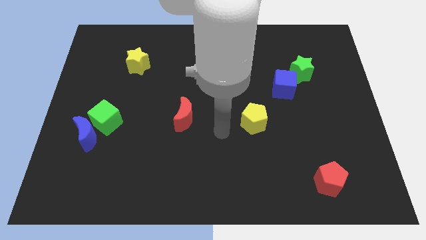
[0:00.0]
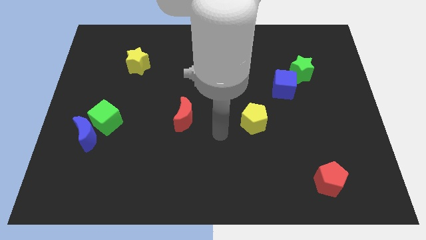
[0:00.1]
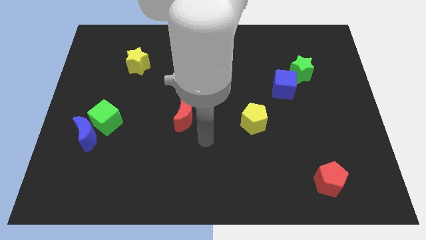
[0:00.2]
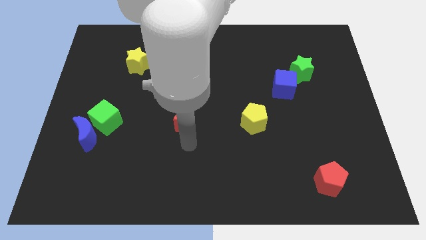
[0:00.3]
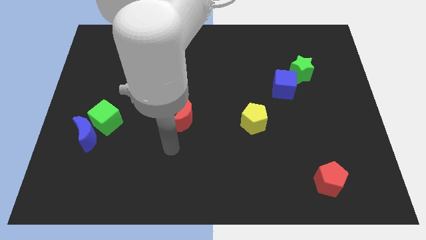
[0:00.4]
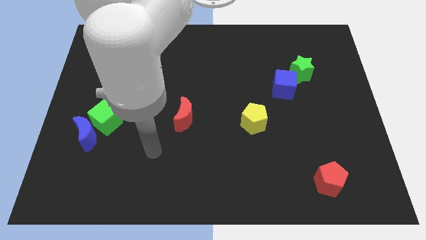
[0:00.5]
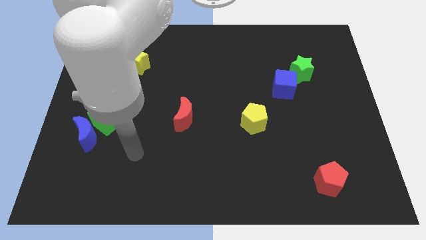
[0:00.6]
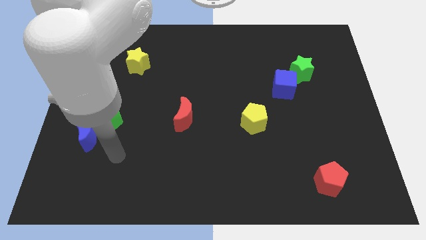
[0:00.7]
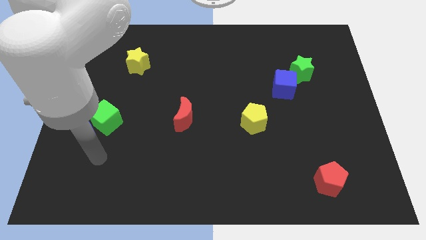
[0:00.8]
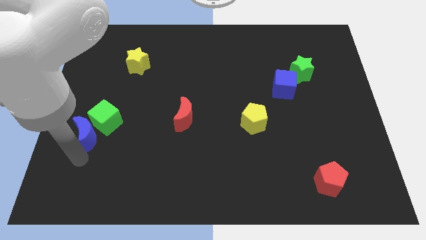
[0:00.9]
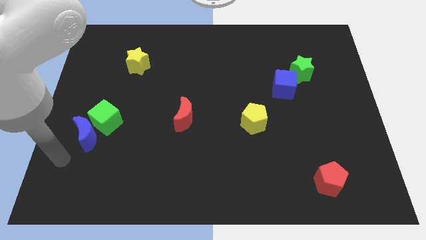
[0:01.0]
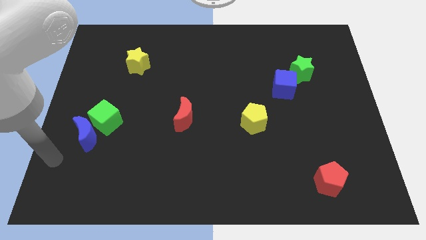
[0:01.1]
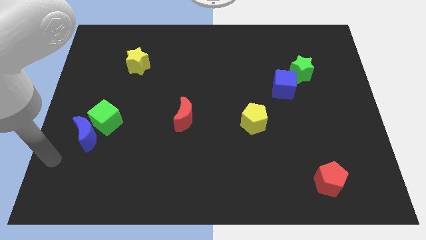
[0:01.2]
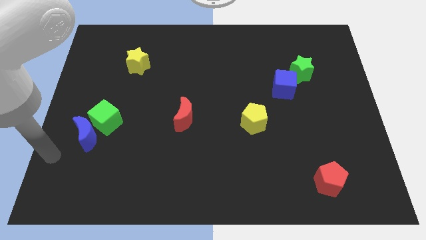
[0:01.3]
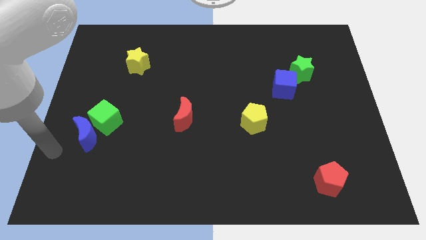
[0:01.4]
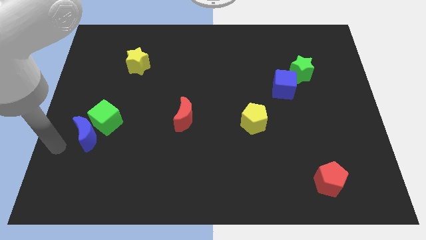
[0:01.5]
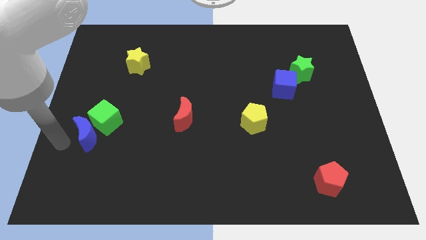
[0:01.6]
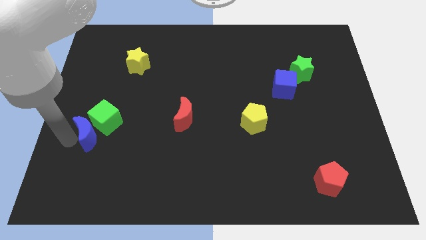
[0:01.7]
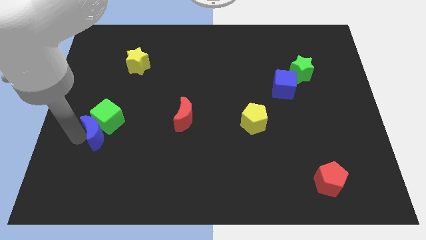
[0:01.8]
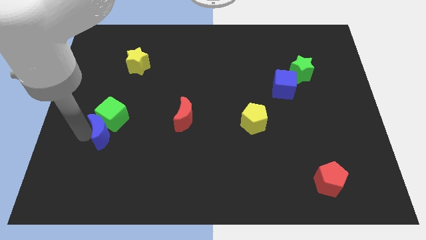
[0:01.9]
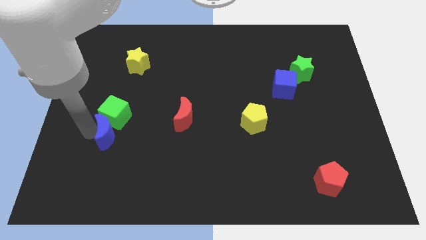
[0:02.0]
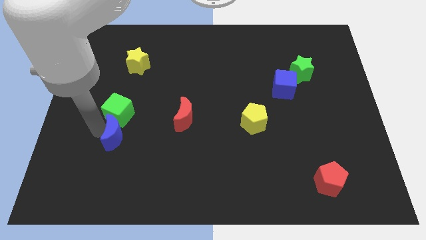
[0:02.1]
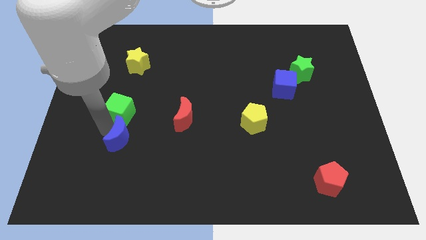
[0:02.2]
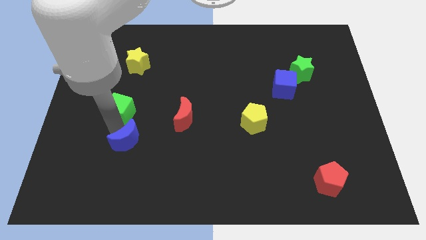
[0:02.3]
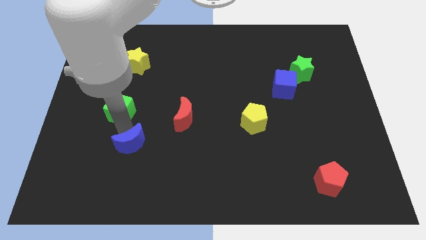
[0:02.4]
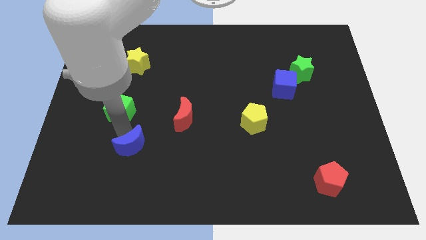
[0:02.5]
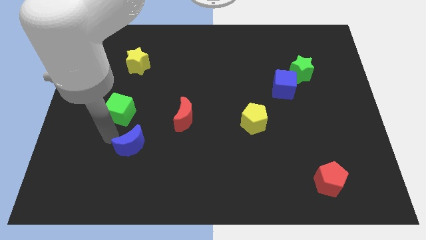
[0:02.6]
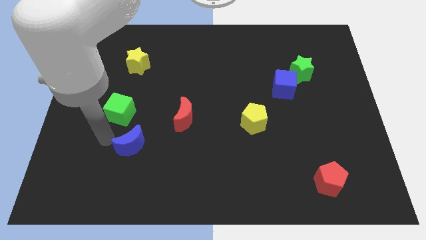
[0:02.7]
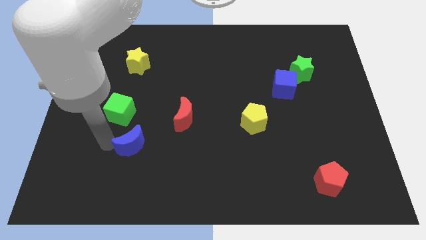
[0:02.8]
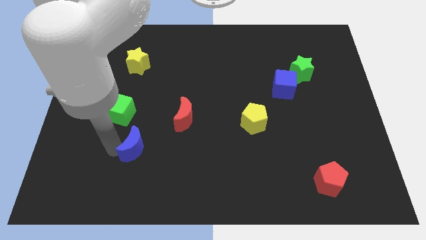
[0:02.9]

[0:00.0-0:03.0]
move the blue crescent slightly away from the green cube

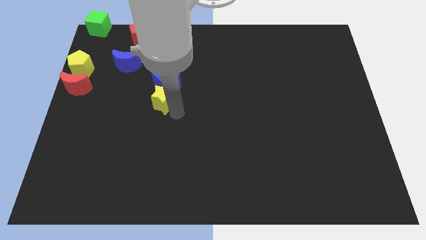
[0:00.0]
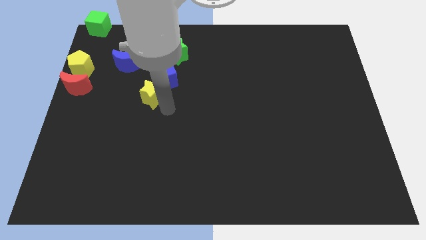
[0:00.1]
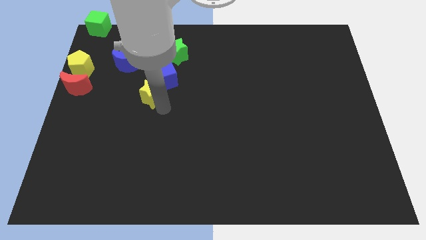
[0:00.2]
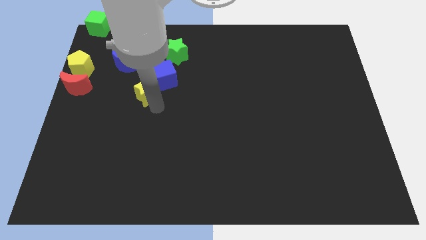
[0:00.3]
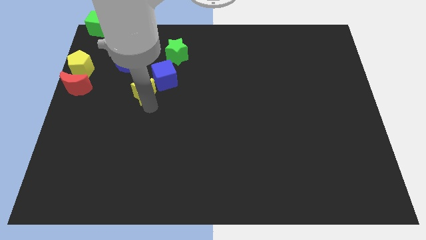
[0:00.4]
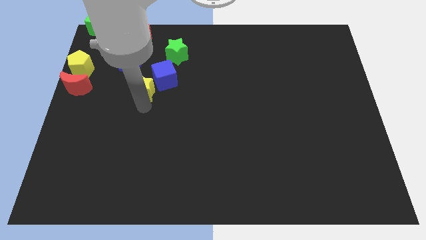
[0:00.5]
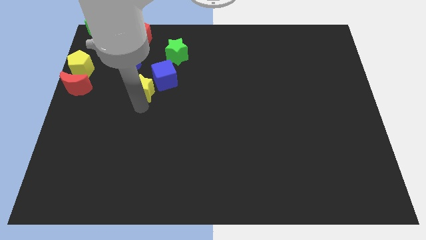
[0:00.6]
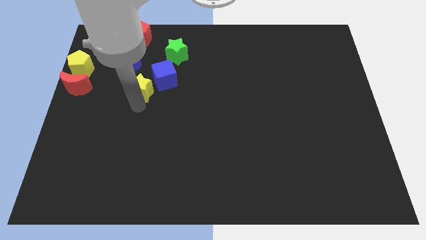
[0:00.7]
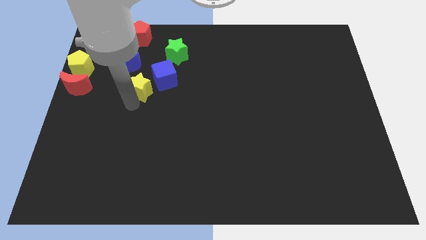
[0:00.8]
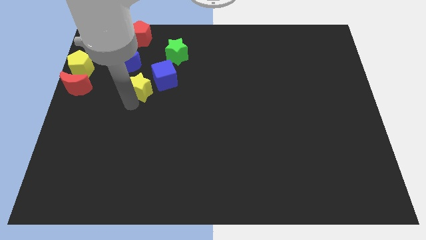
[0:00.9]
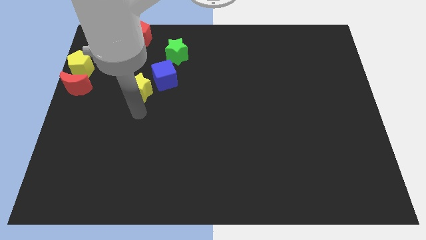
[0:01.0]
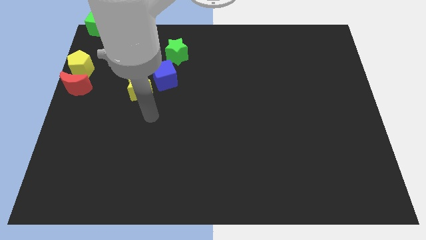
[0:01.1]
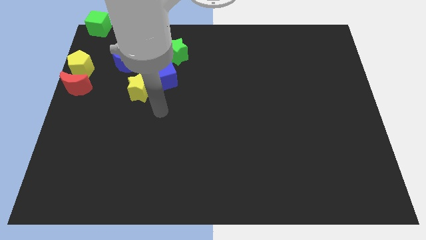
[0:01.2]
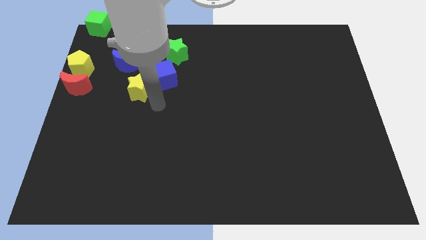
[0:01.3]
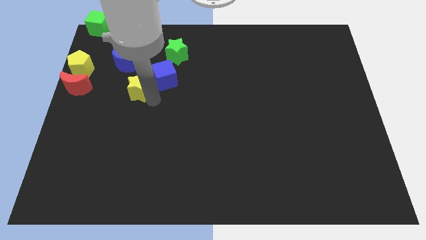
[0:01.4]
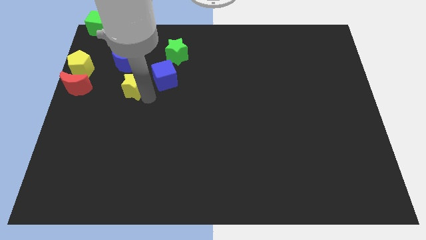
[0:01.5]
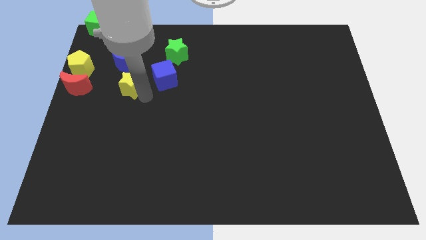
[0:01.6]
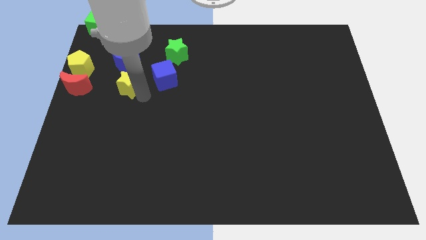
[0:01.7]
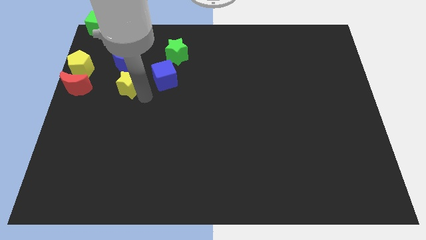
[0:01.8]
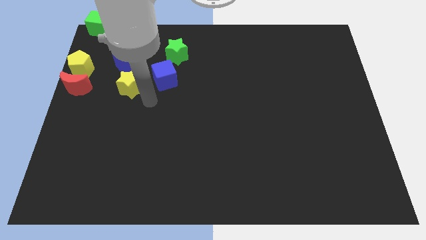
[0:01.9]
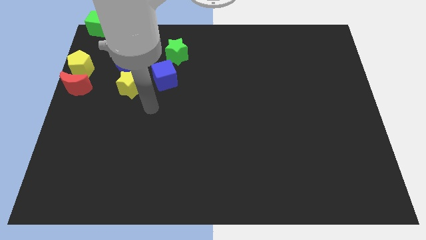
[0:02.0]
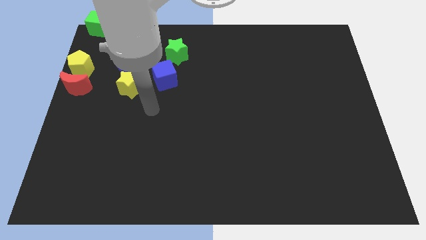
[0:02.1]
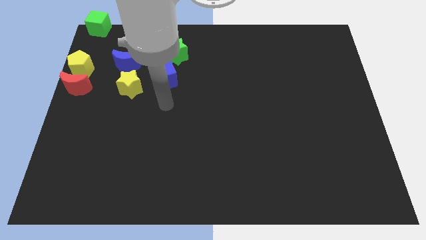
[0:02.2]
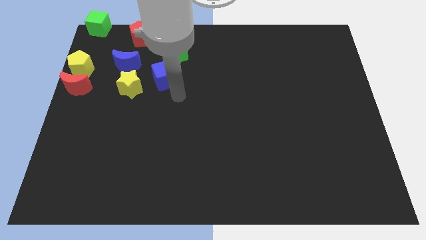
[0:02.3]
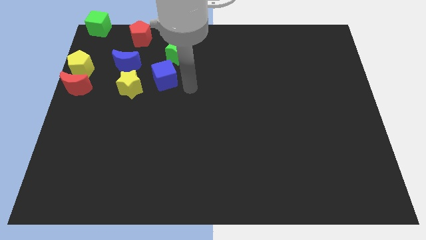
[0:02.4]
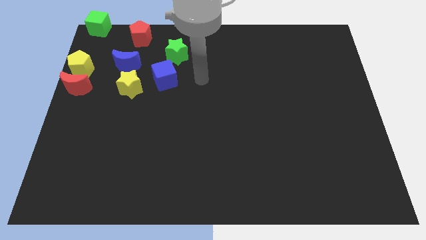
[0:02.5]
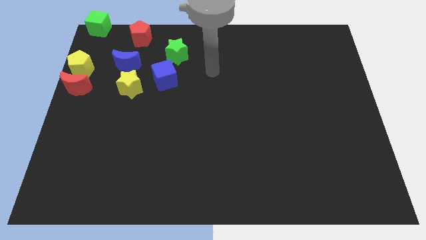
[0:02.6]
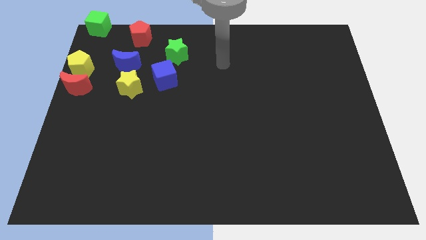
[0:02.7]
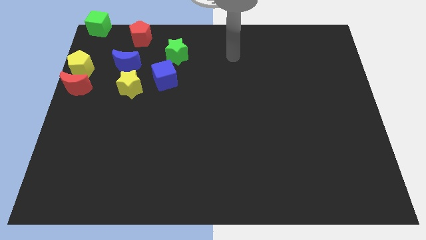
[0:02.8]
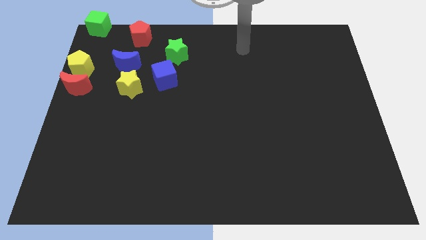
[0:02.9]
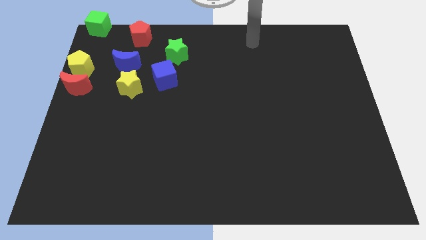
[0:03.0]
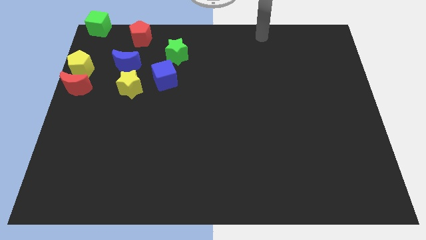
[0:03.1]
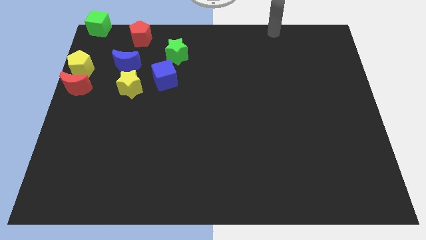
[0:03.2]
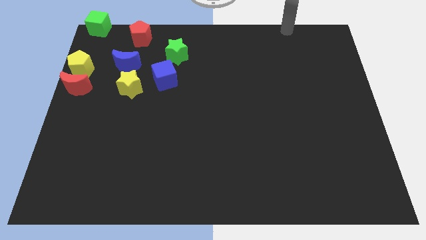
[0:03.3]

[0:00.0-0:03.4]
push the yellow star below the blue moon

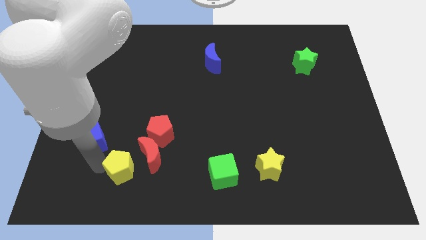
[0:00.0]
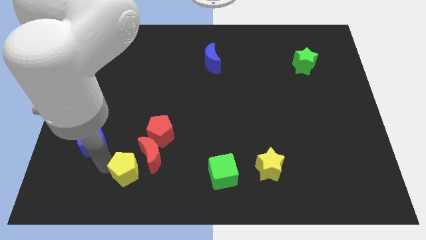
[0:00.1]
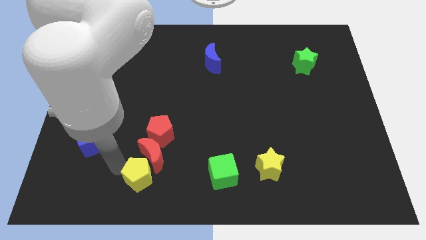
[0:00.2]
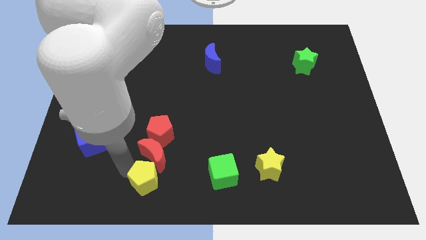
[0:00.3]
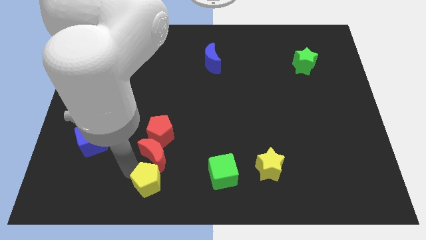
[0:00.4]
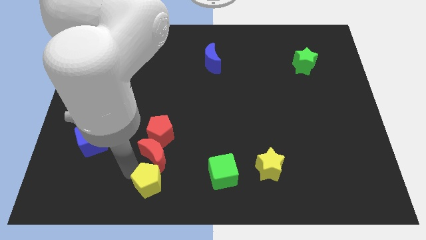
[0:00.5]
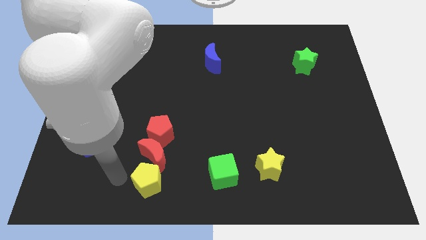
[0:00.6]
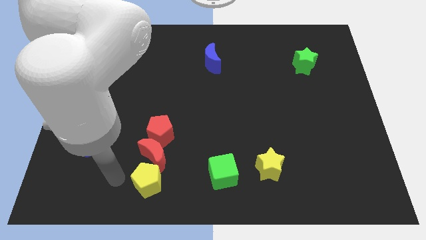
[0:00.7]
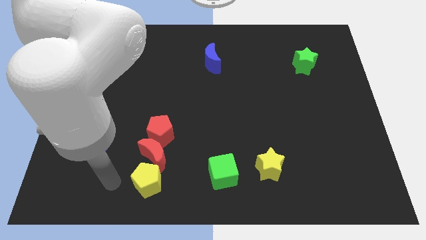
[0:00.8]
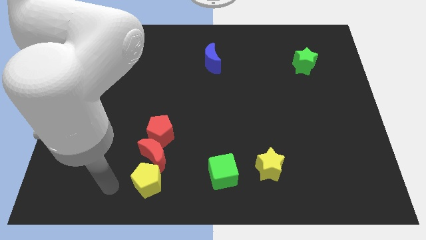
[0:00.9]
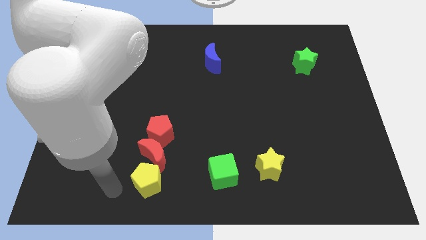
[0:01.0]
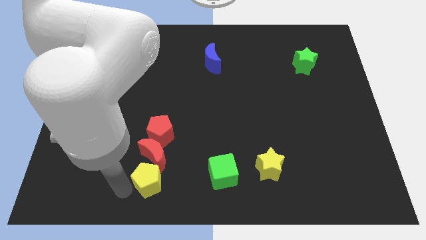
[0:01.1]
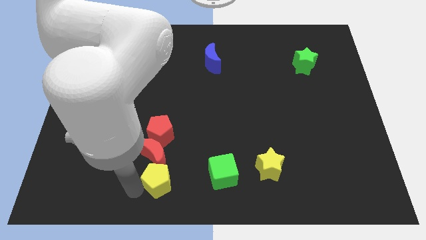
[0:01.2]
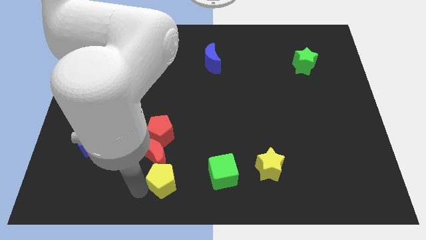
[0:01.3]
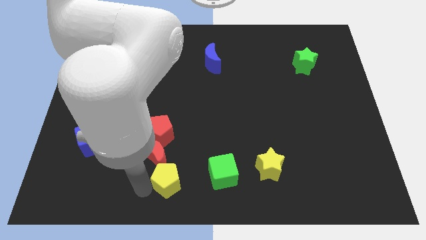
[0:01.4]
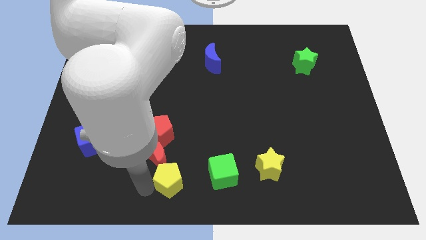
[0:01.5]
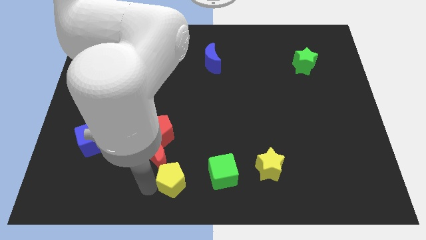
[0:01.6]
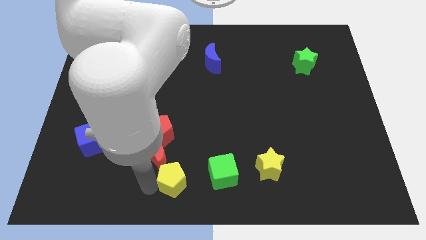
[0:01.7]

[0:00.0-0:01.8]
move the yellow pentagon towards the green cube

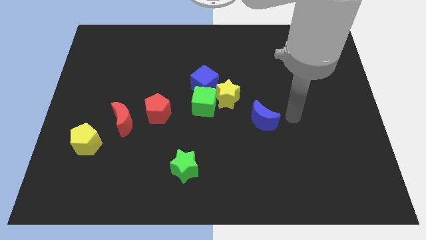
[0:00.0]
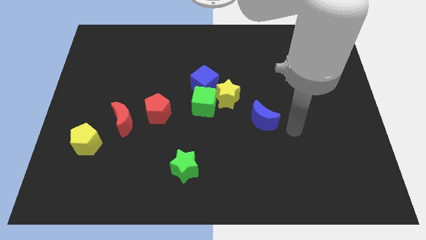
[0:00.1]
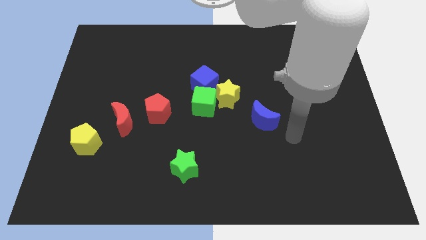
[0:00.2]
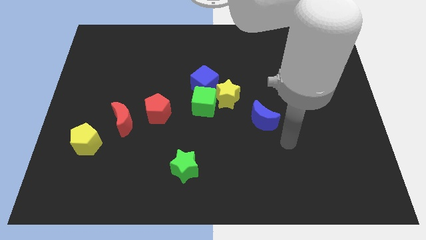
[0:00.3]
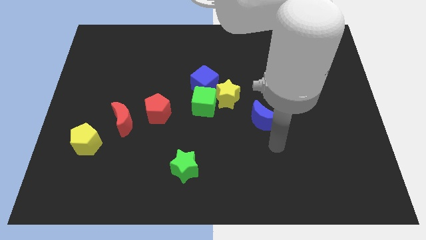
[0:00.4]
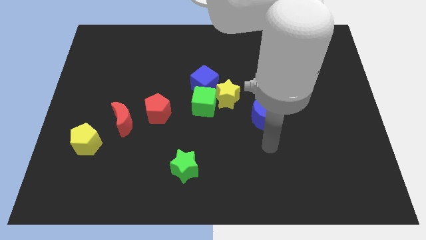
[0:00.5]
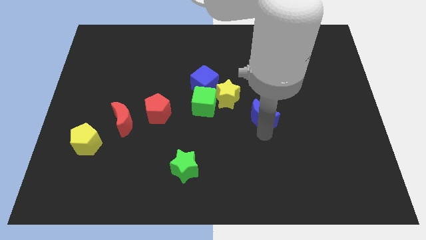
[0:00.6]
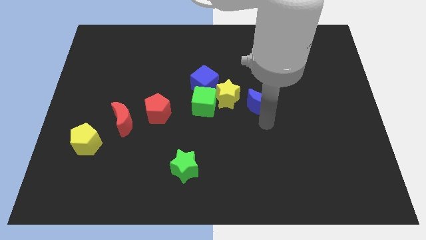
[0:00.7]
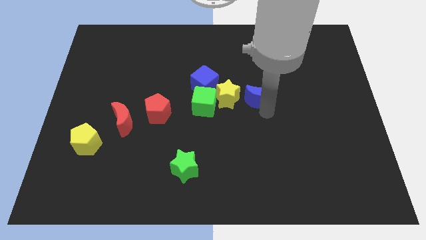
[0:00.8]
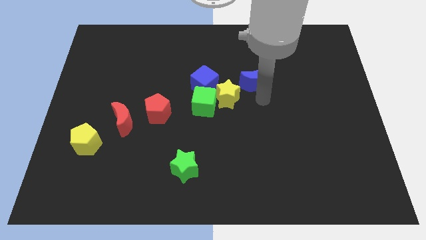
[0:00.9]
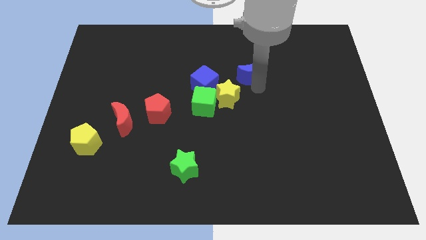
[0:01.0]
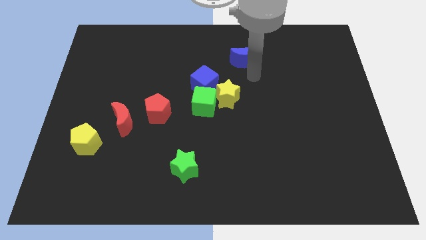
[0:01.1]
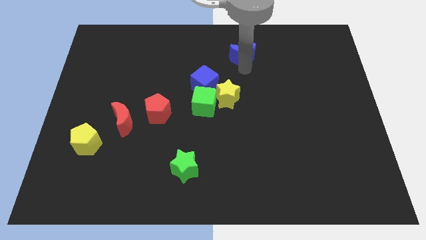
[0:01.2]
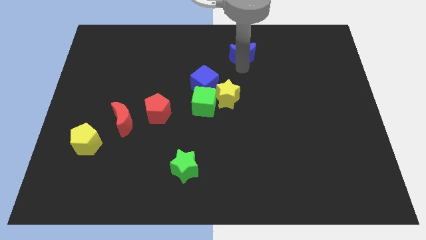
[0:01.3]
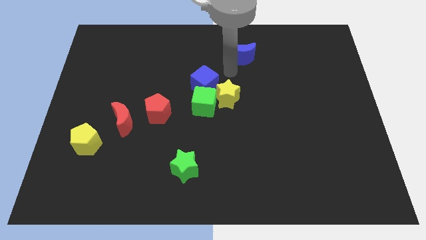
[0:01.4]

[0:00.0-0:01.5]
push the blue crescent towards the top of the board
